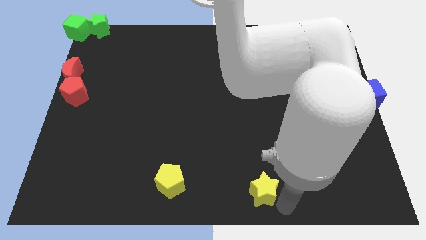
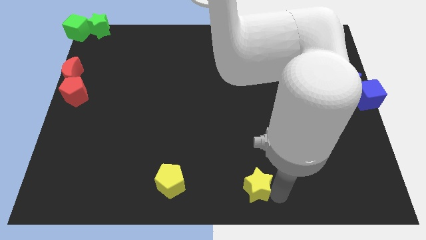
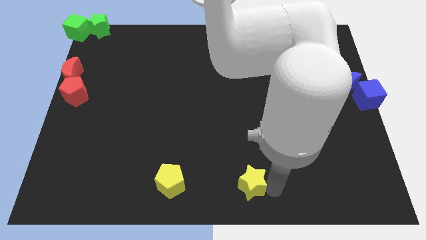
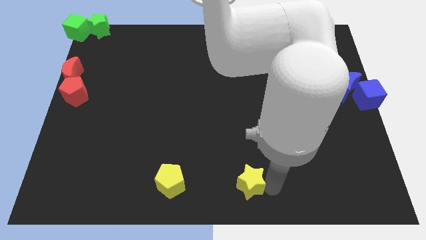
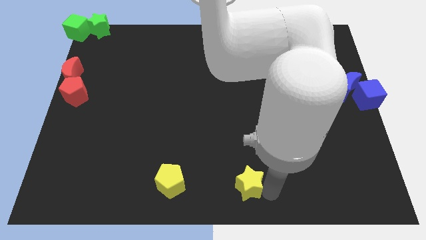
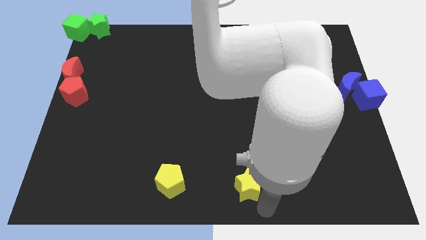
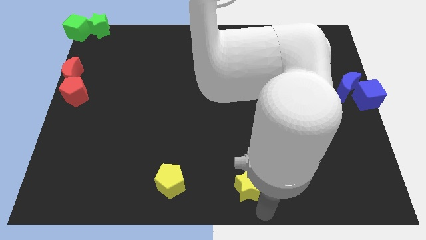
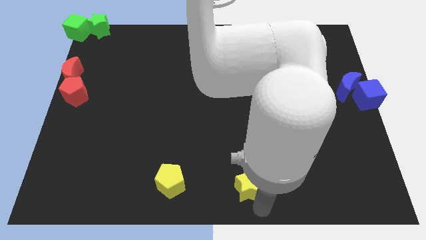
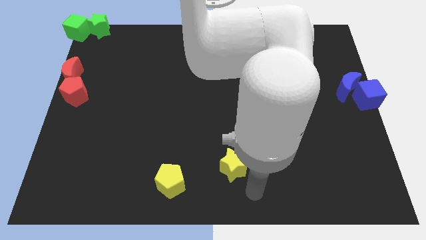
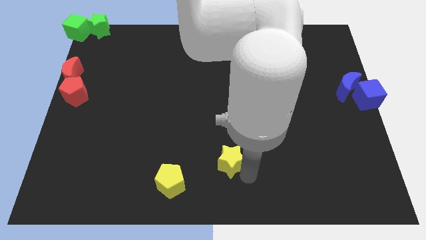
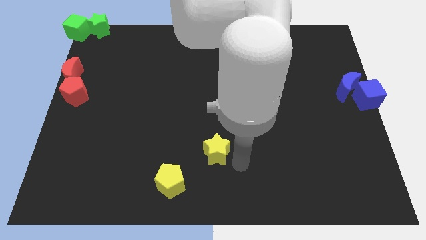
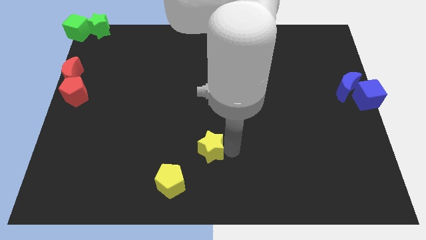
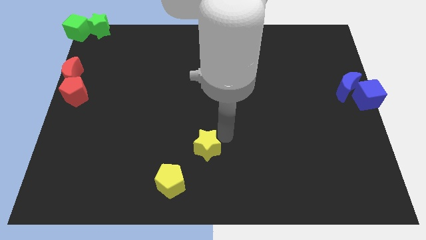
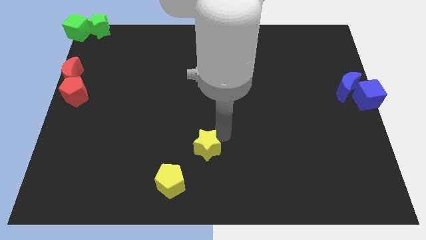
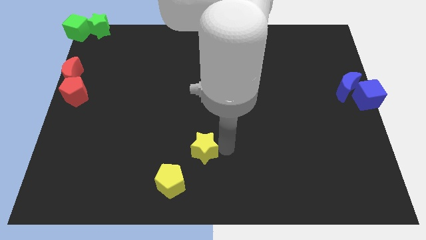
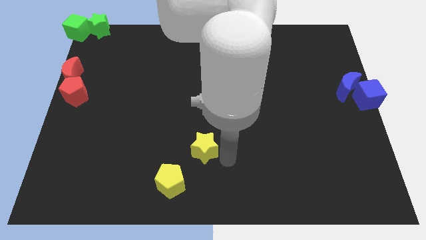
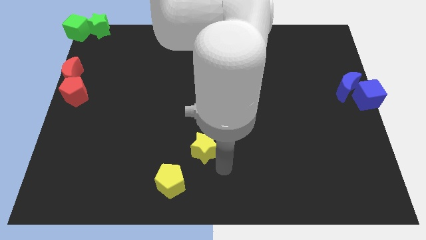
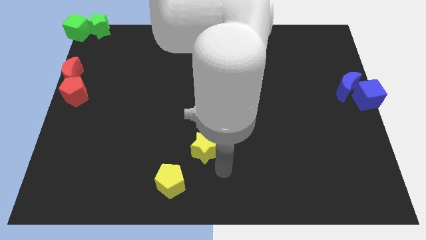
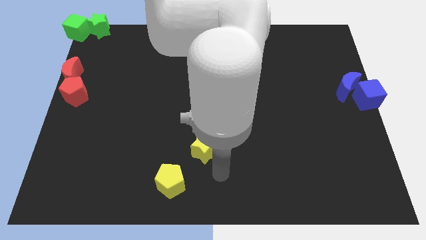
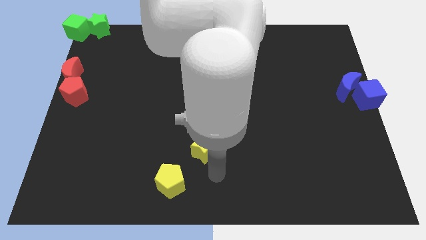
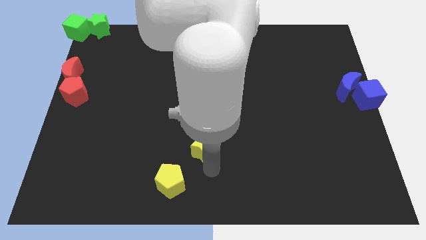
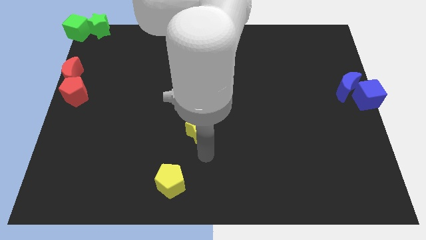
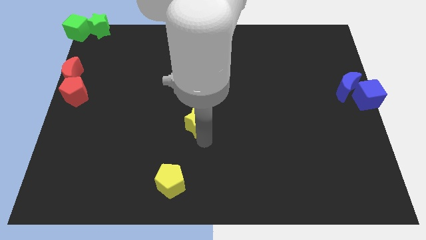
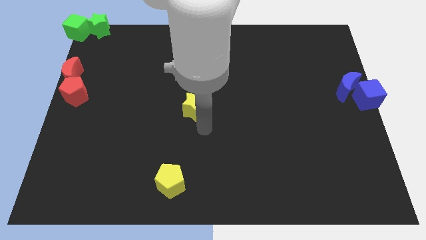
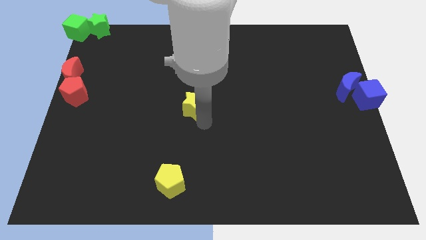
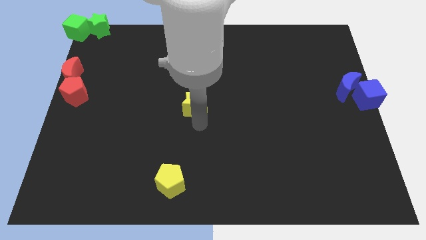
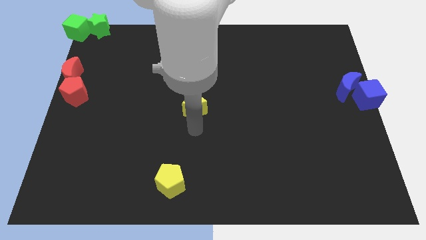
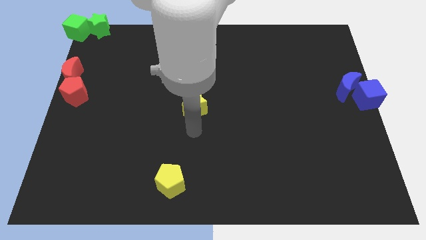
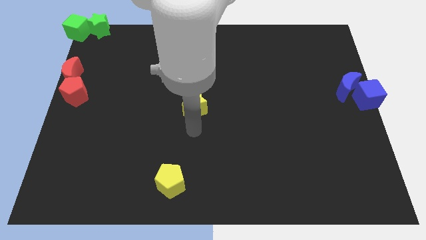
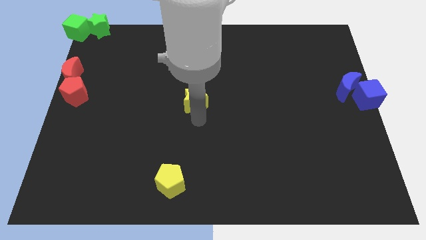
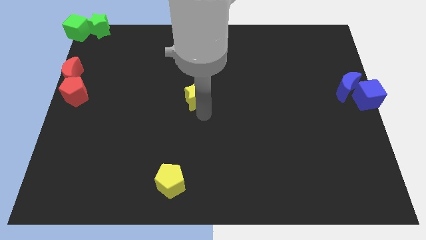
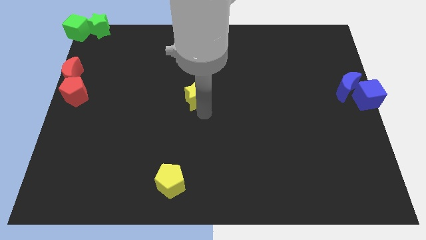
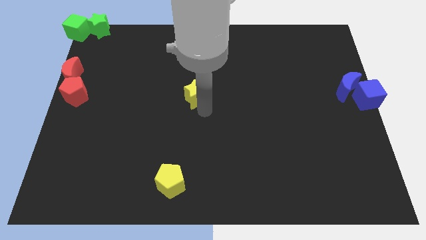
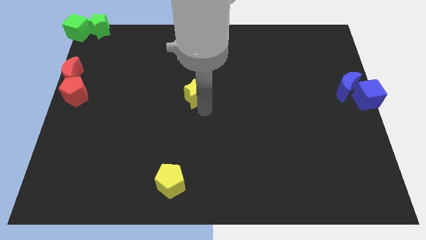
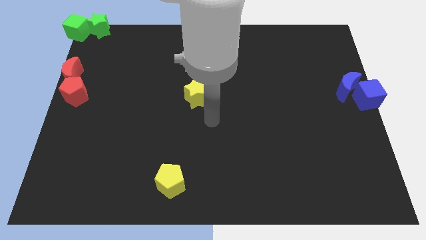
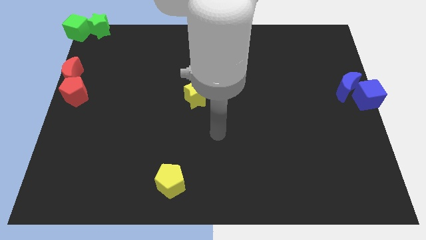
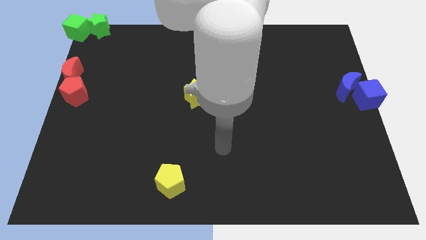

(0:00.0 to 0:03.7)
move the yellow star to the center of the board

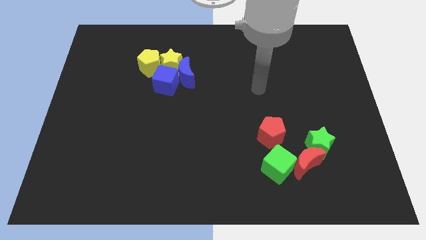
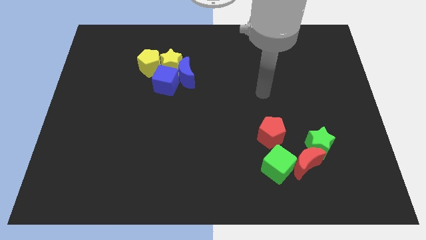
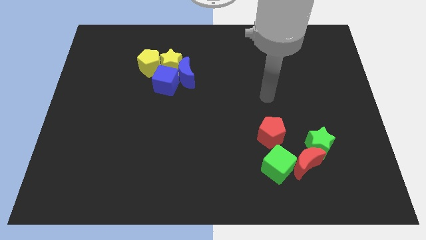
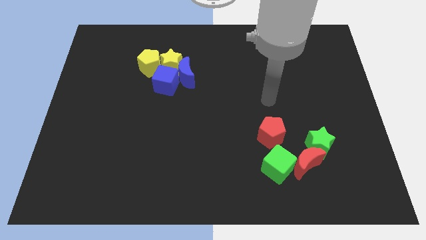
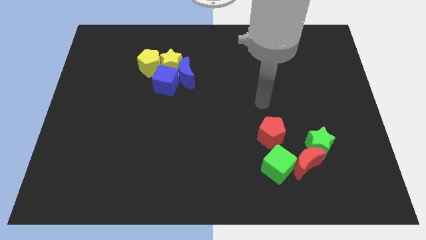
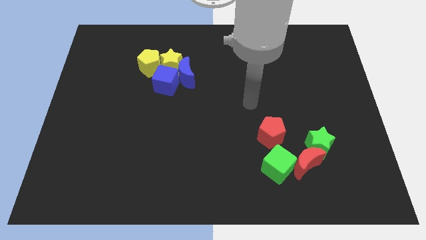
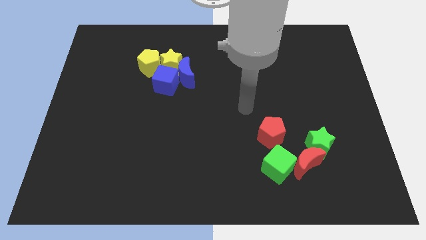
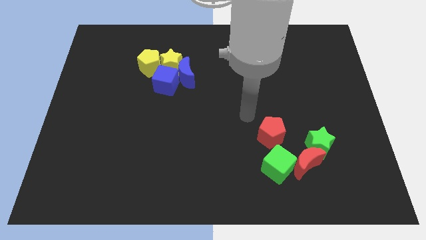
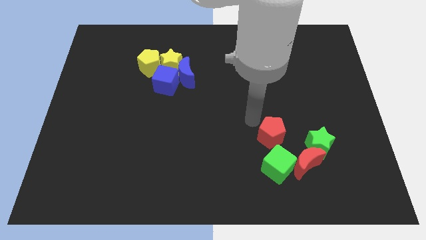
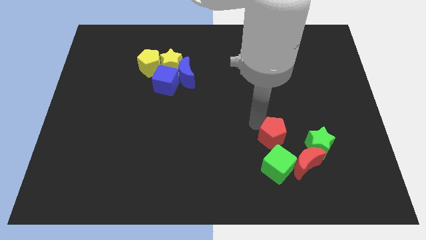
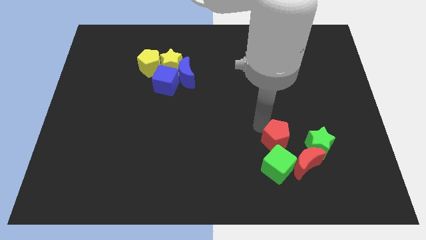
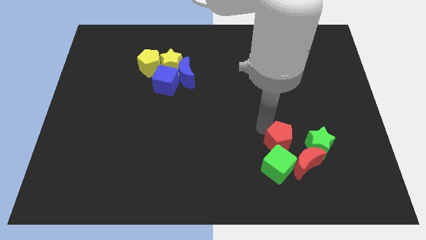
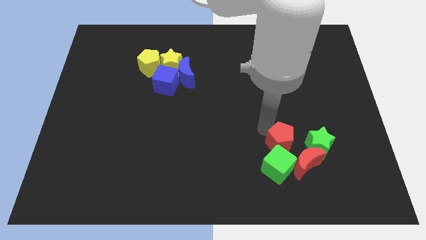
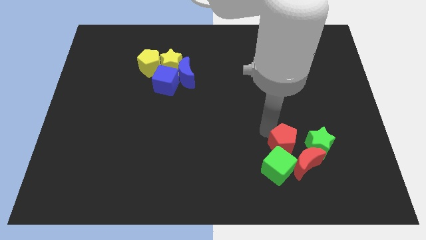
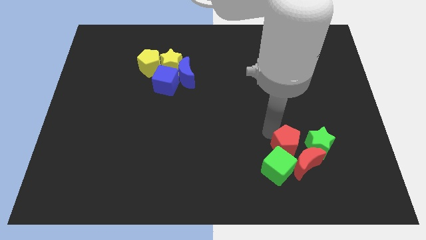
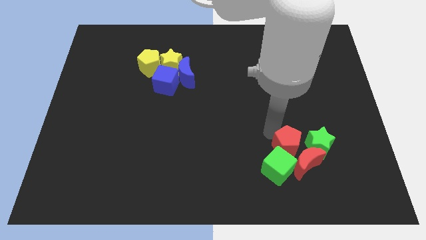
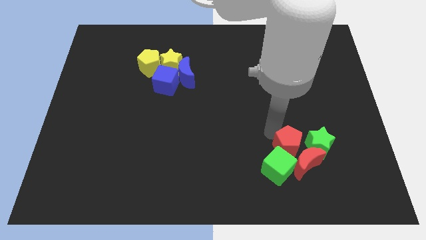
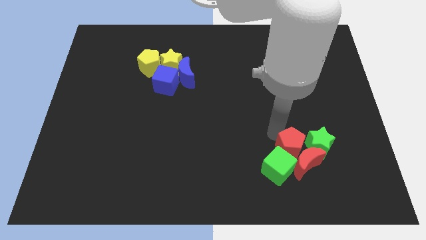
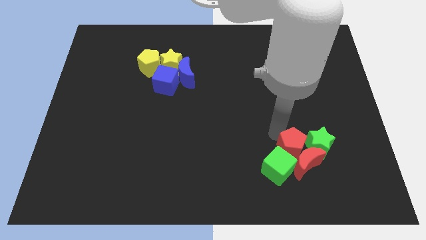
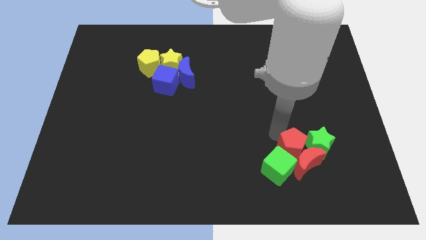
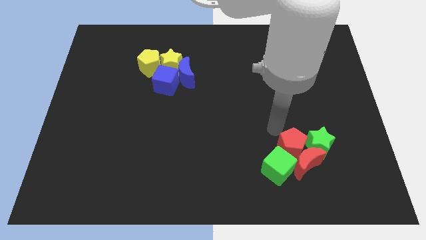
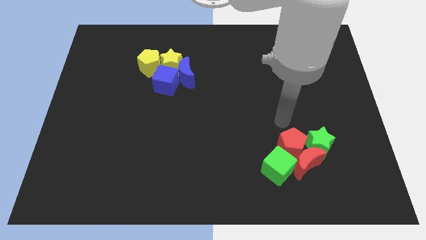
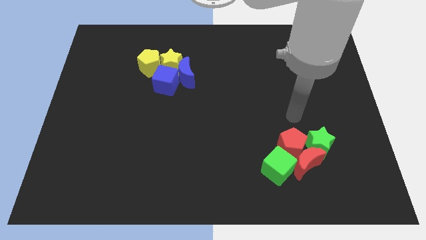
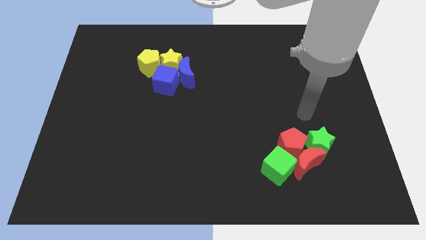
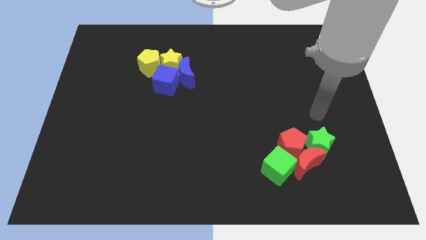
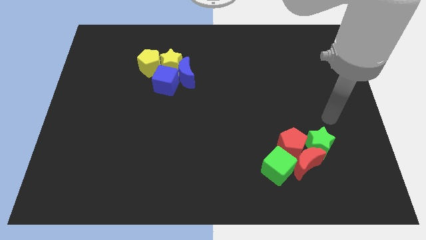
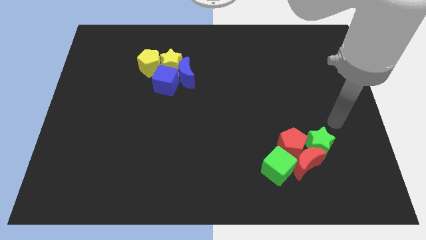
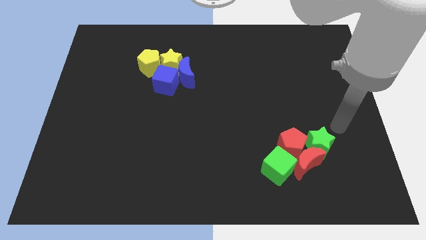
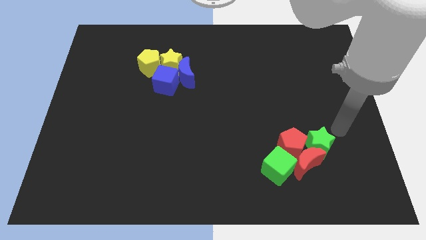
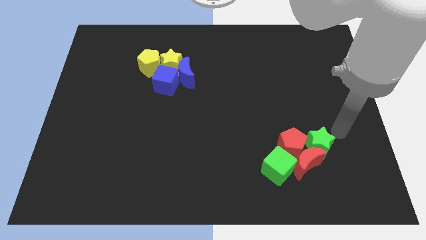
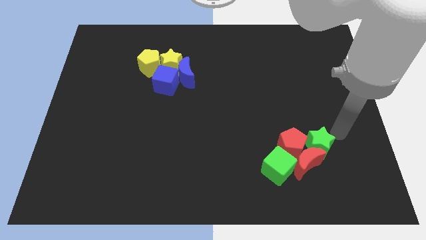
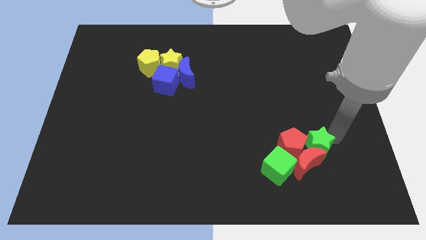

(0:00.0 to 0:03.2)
adjust the red pentagon slightly into the green star and green cube touching the red crescent

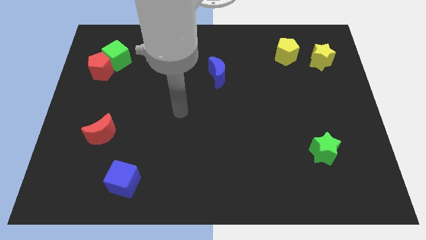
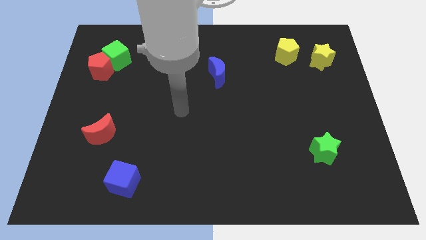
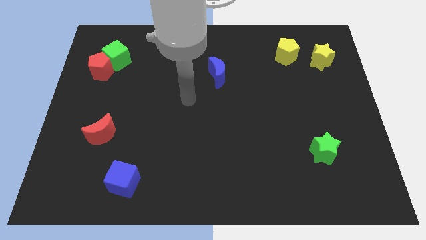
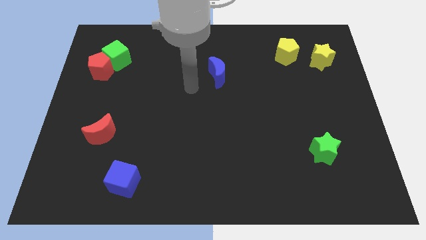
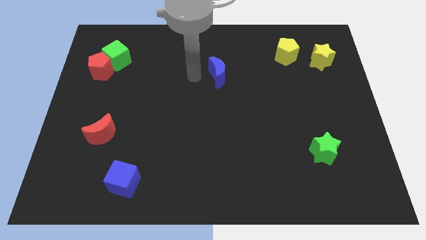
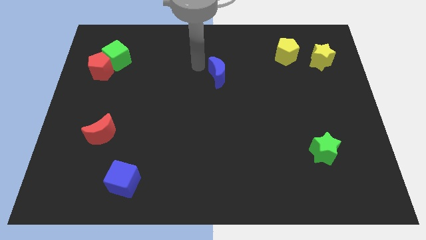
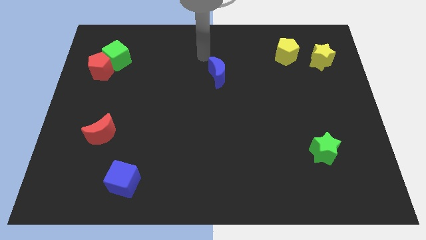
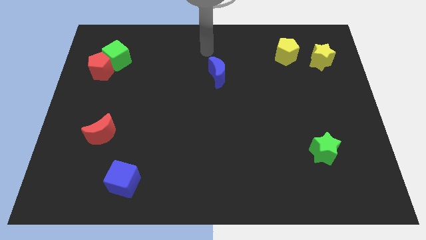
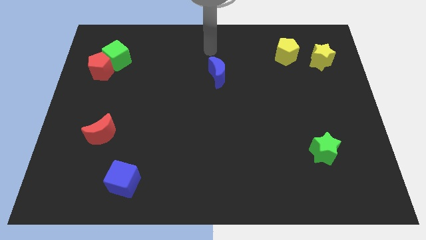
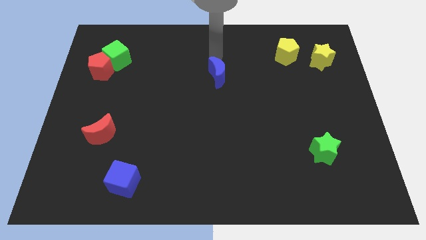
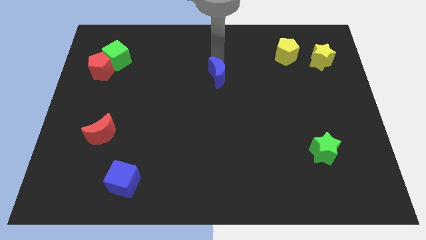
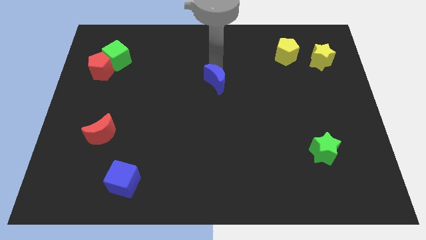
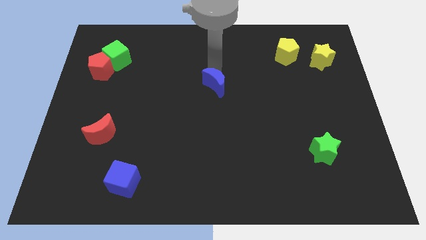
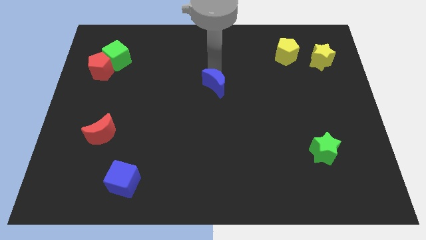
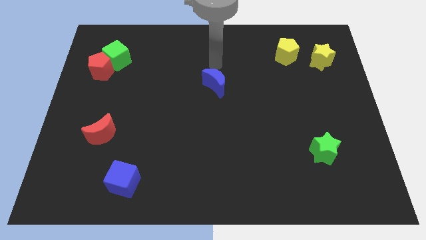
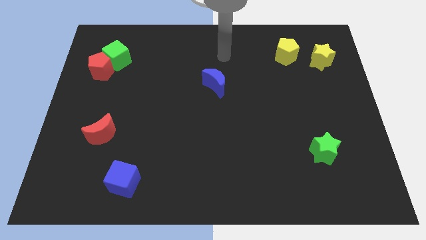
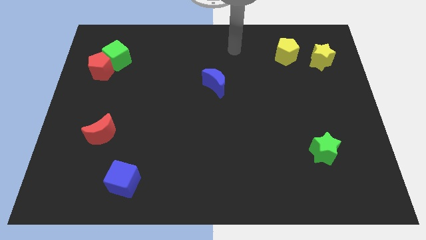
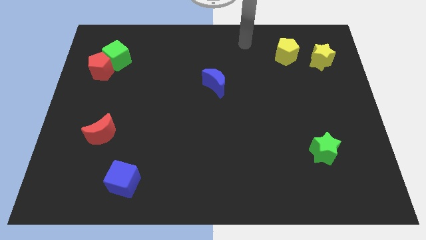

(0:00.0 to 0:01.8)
push the blue crescent slightly towards the bottom

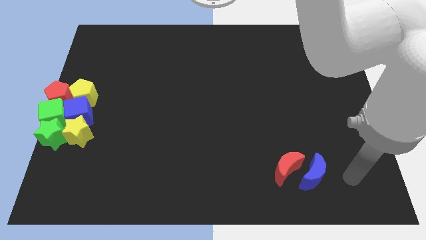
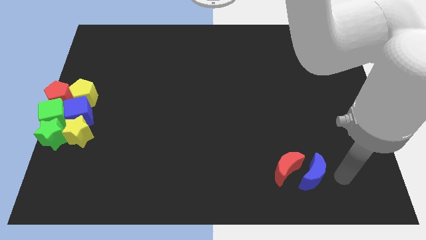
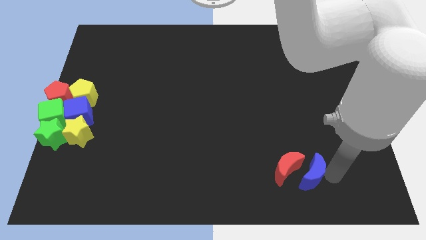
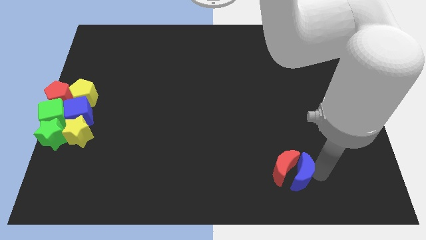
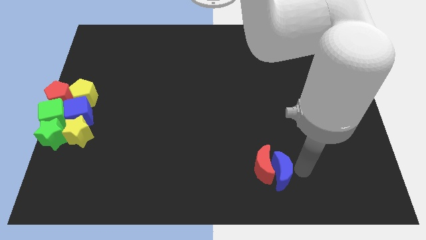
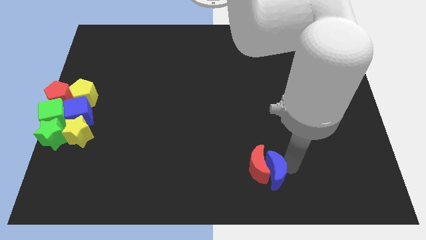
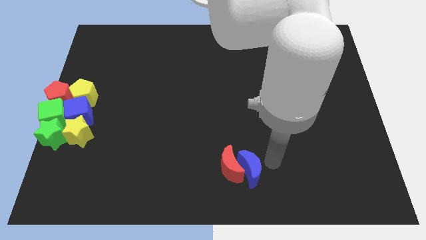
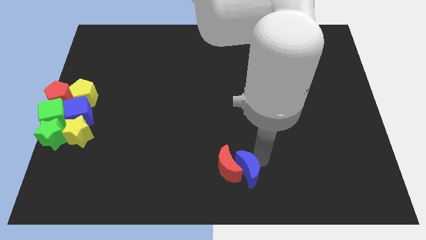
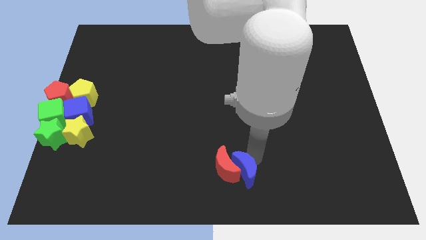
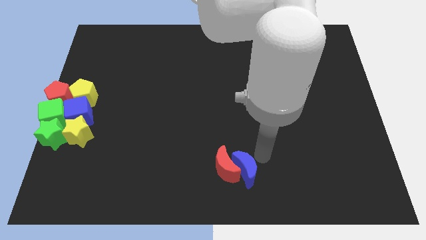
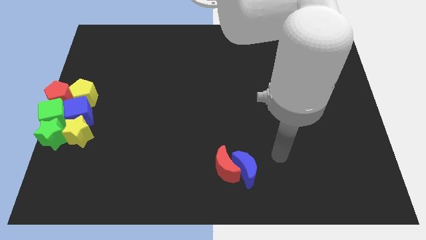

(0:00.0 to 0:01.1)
push the blue moon into the red moon
